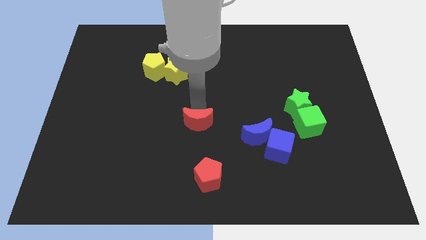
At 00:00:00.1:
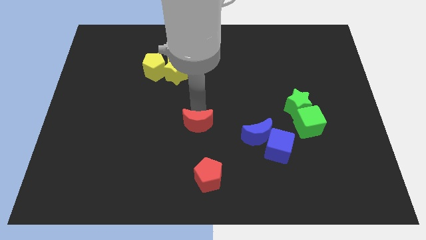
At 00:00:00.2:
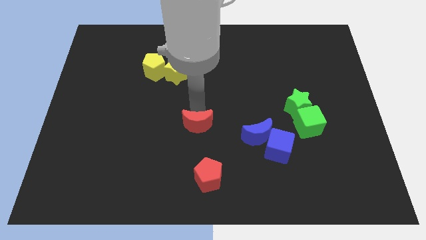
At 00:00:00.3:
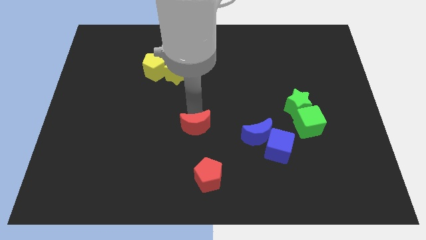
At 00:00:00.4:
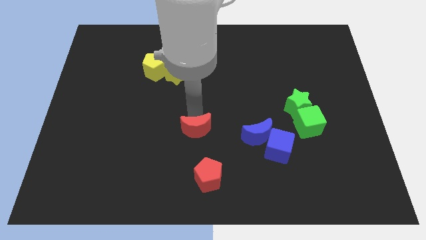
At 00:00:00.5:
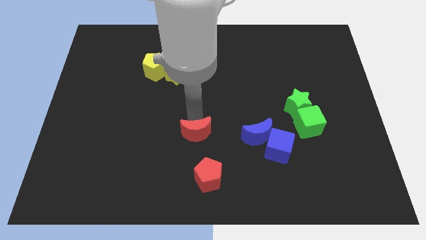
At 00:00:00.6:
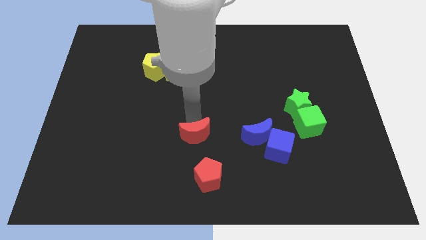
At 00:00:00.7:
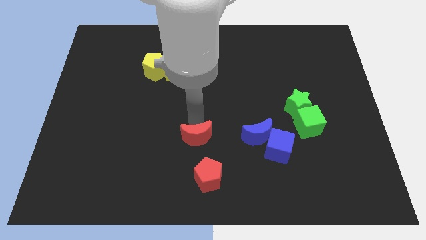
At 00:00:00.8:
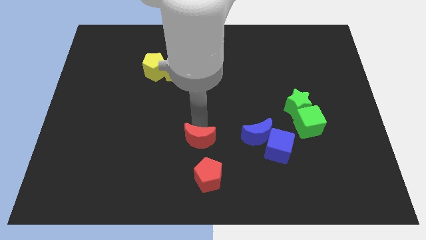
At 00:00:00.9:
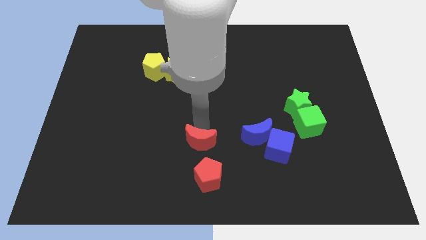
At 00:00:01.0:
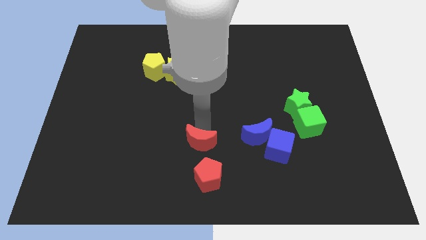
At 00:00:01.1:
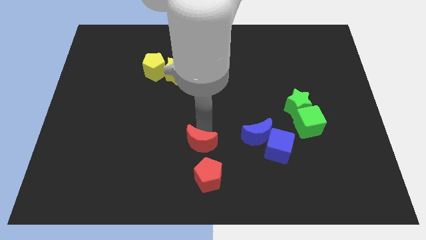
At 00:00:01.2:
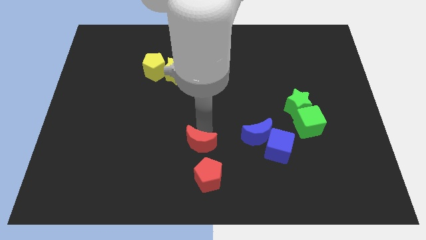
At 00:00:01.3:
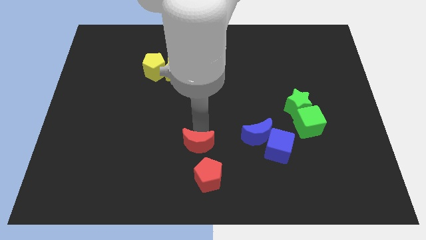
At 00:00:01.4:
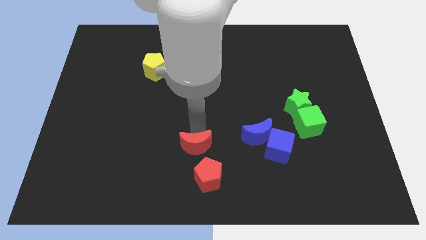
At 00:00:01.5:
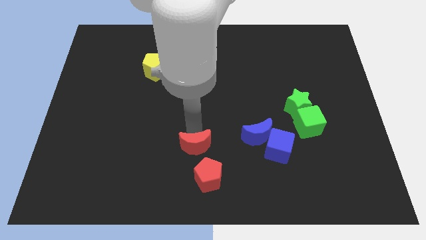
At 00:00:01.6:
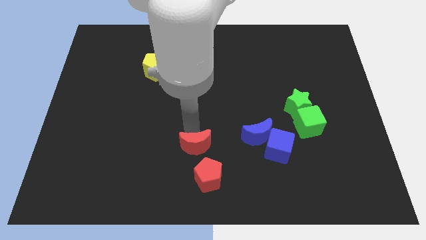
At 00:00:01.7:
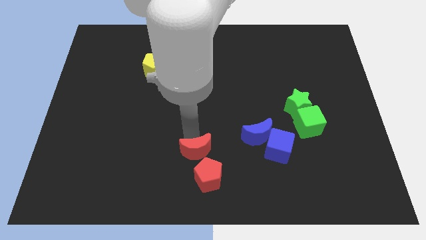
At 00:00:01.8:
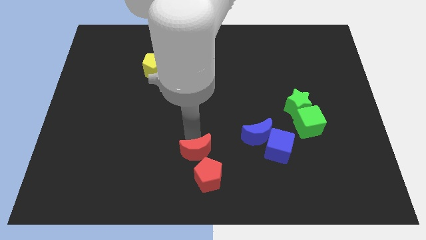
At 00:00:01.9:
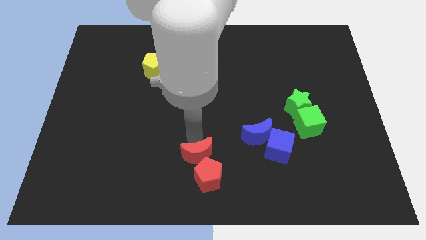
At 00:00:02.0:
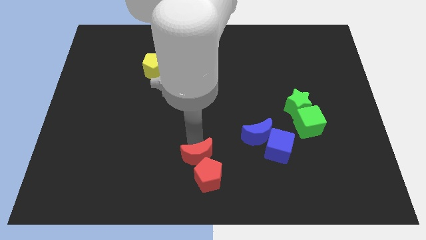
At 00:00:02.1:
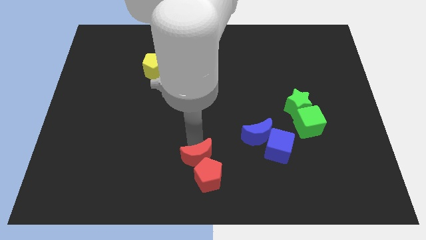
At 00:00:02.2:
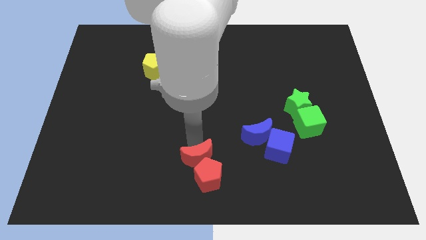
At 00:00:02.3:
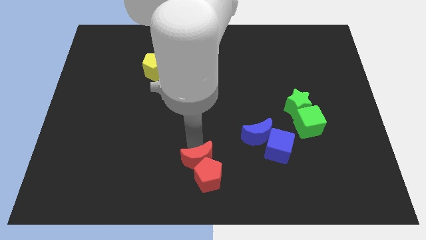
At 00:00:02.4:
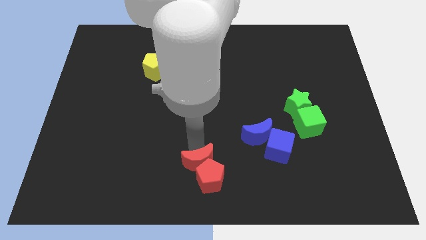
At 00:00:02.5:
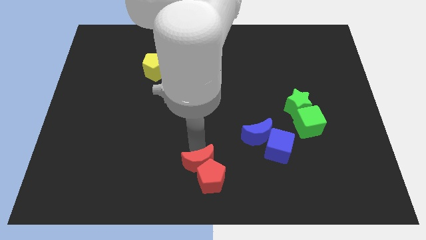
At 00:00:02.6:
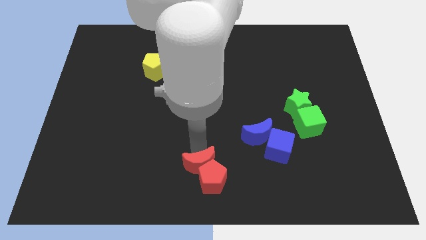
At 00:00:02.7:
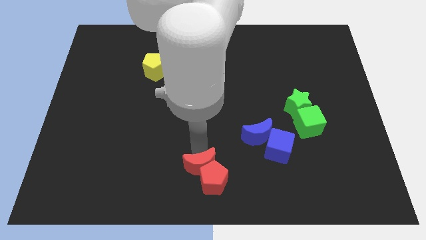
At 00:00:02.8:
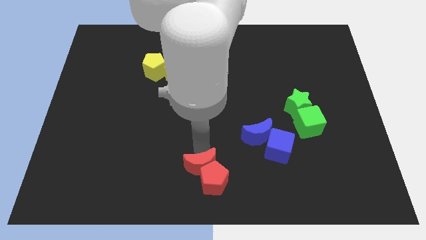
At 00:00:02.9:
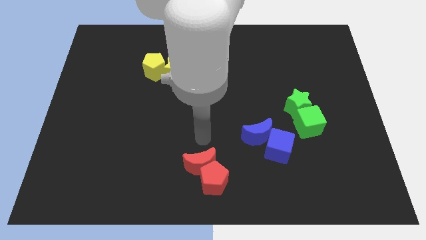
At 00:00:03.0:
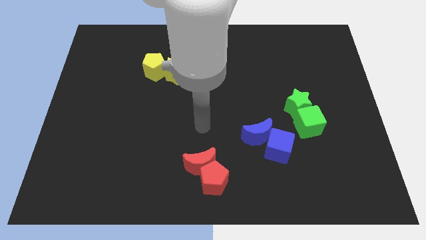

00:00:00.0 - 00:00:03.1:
push the red moon into the red pentagon

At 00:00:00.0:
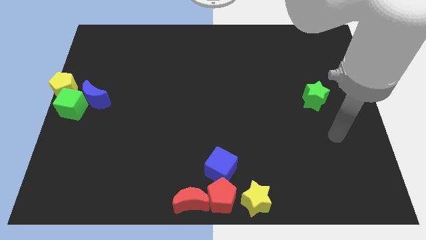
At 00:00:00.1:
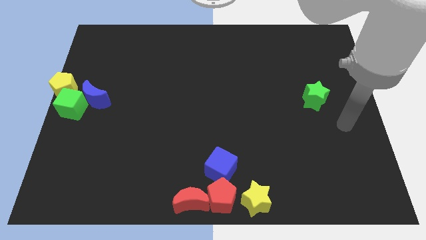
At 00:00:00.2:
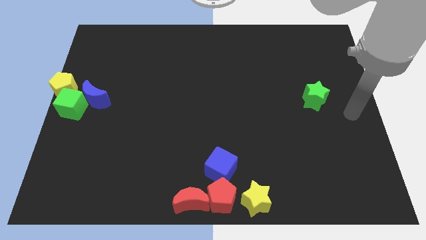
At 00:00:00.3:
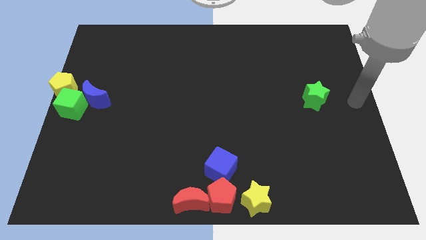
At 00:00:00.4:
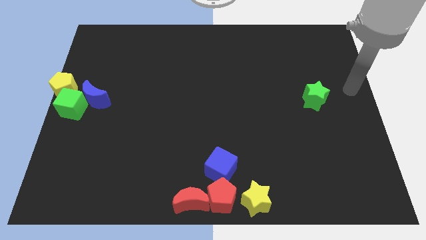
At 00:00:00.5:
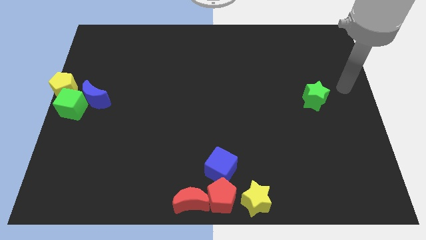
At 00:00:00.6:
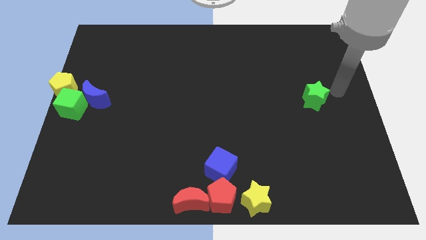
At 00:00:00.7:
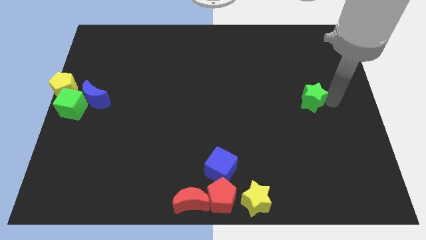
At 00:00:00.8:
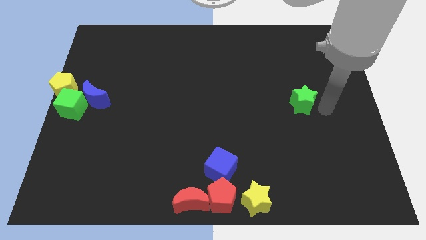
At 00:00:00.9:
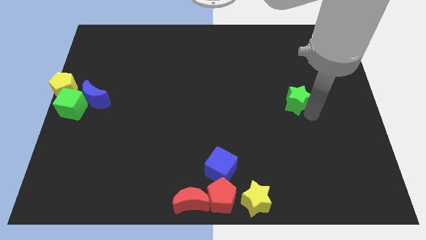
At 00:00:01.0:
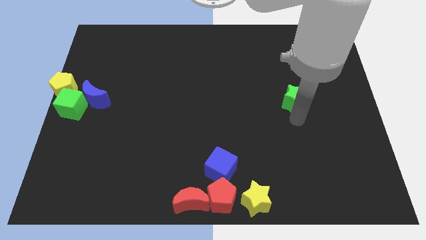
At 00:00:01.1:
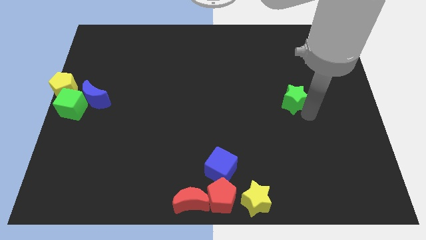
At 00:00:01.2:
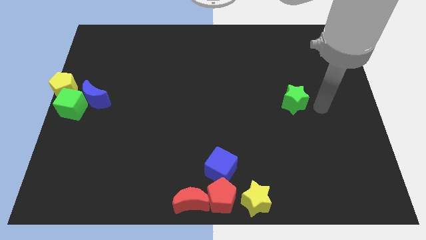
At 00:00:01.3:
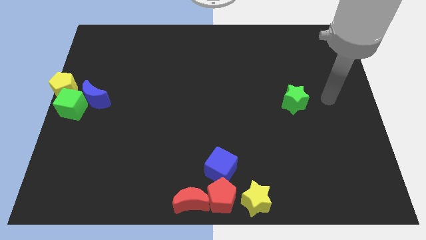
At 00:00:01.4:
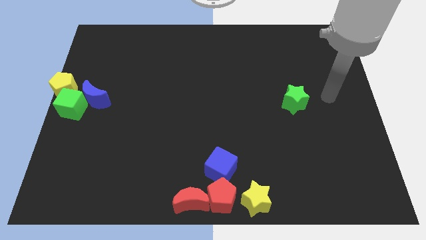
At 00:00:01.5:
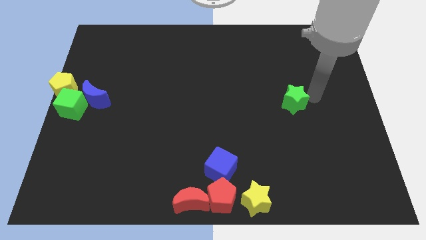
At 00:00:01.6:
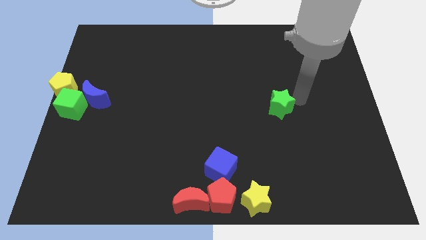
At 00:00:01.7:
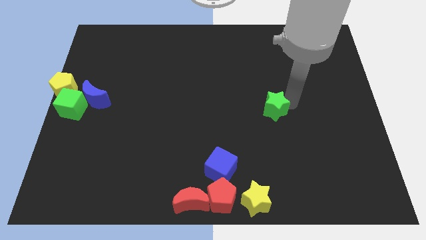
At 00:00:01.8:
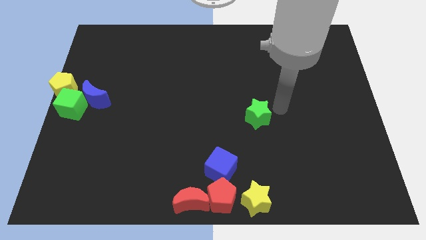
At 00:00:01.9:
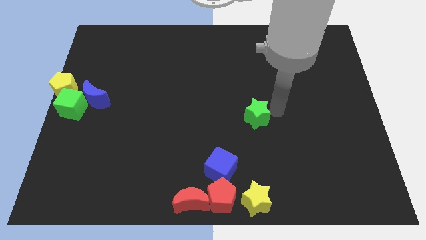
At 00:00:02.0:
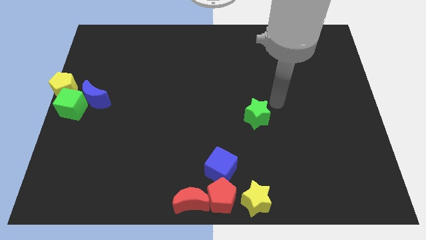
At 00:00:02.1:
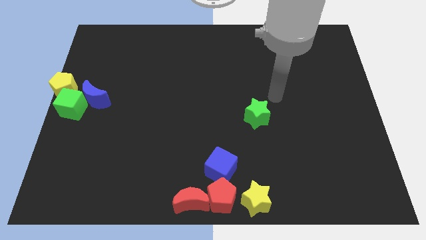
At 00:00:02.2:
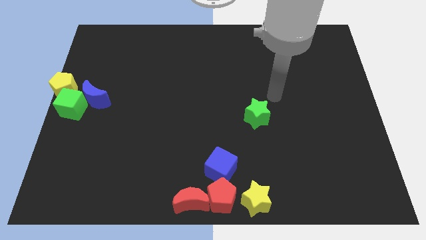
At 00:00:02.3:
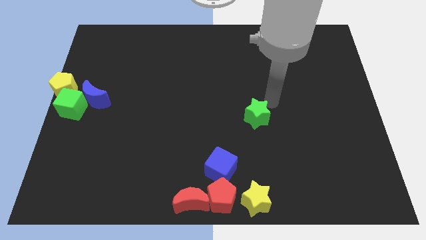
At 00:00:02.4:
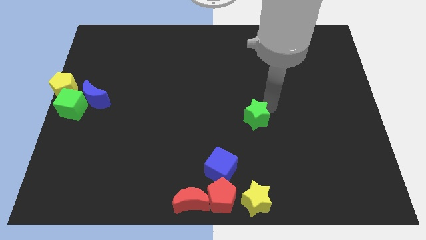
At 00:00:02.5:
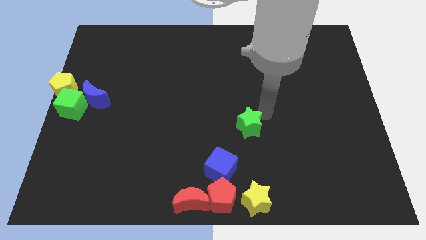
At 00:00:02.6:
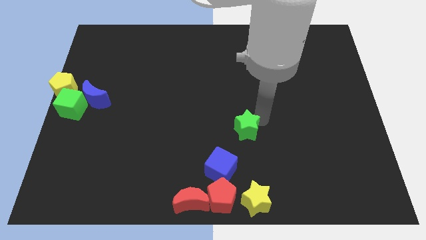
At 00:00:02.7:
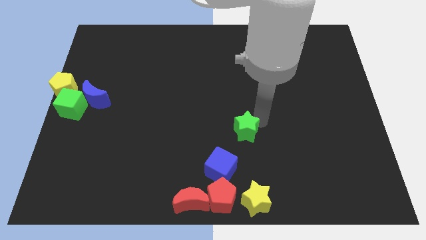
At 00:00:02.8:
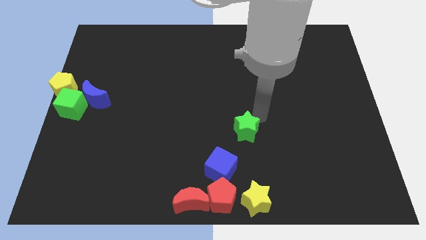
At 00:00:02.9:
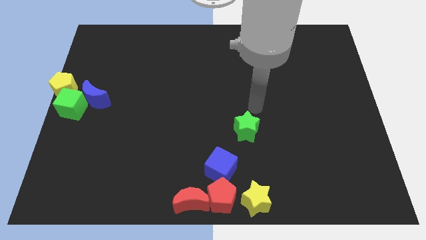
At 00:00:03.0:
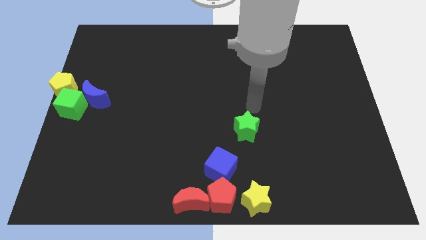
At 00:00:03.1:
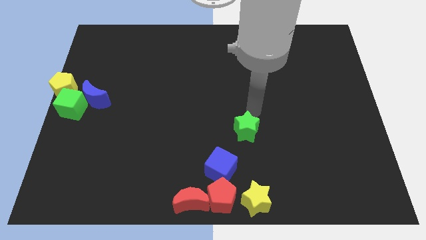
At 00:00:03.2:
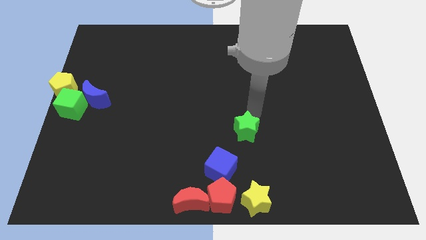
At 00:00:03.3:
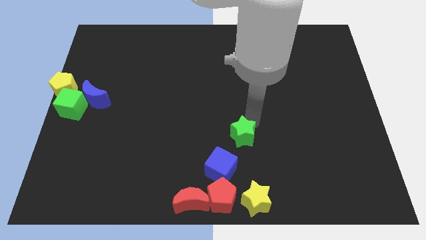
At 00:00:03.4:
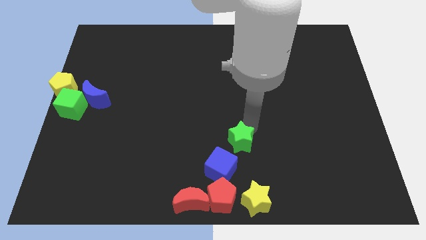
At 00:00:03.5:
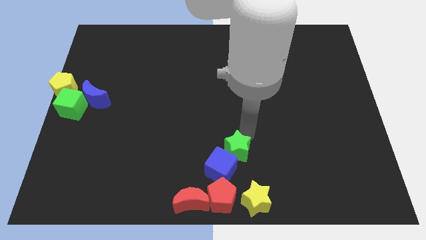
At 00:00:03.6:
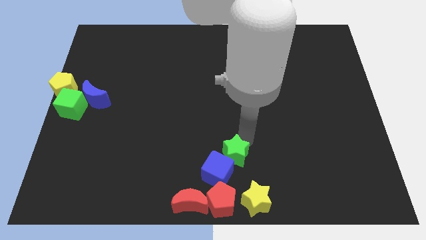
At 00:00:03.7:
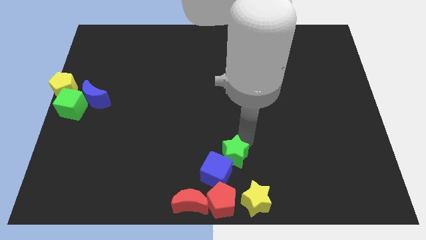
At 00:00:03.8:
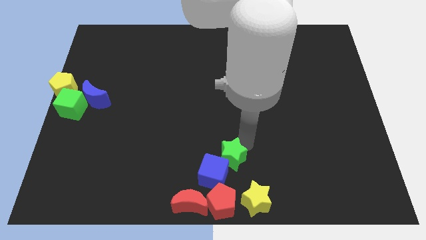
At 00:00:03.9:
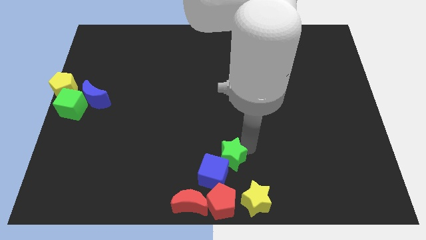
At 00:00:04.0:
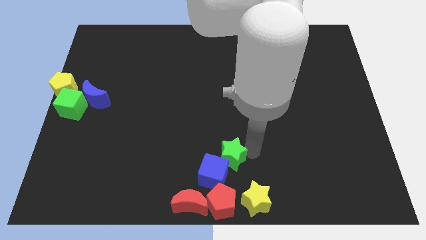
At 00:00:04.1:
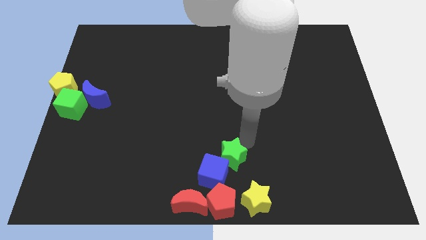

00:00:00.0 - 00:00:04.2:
move green star into the blue cube

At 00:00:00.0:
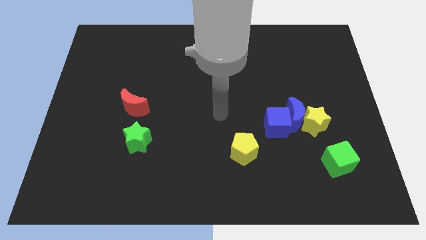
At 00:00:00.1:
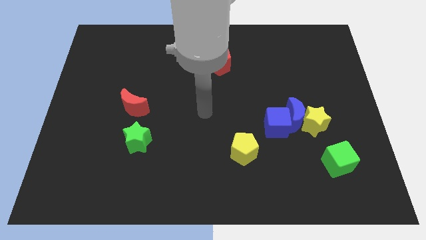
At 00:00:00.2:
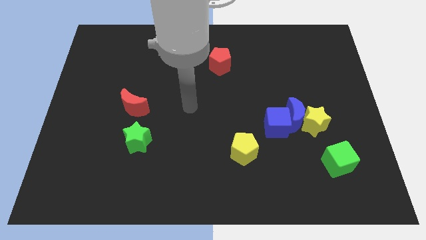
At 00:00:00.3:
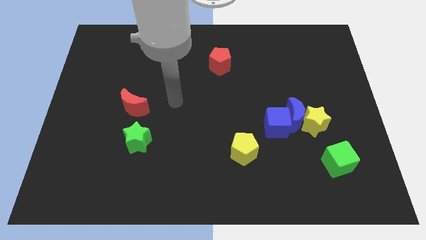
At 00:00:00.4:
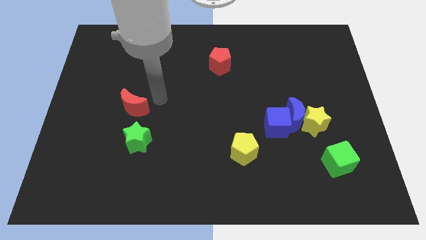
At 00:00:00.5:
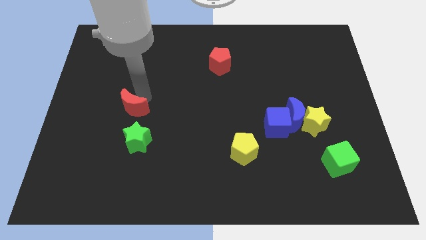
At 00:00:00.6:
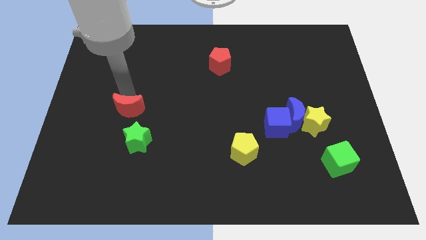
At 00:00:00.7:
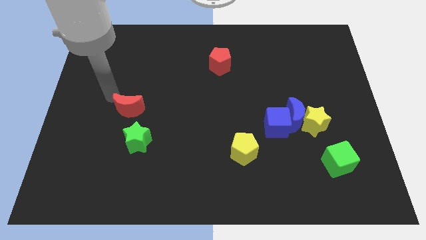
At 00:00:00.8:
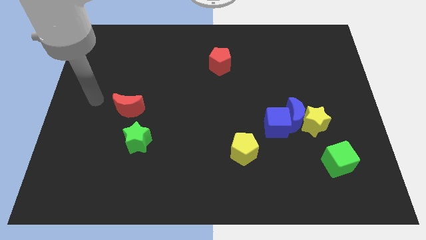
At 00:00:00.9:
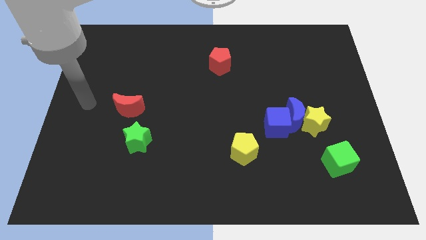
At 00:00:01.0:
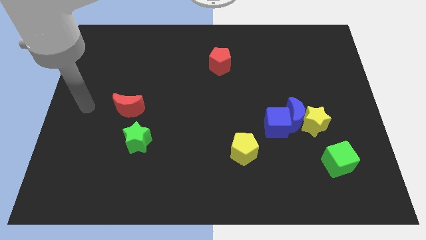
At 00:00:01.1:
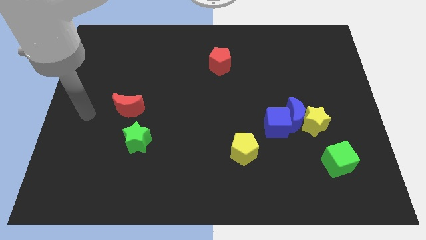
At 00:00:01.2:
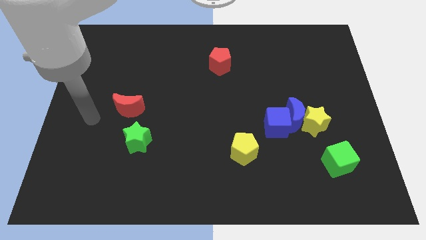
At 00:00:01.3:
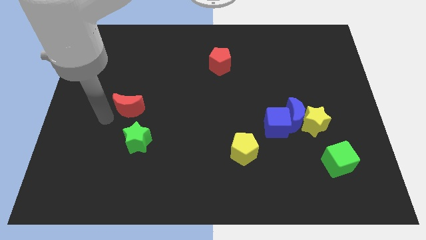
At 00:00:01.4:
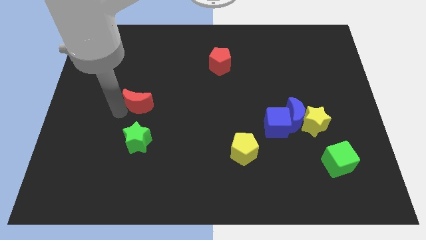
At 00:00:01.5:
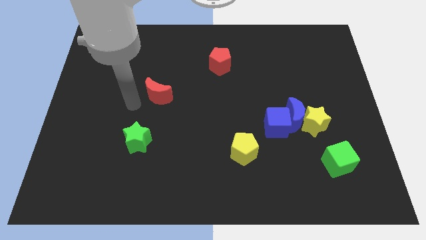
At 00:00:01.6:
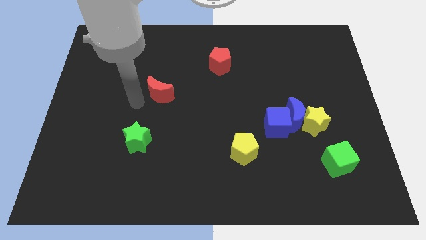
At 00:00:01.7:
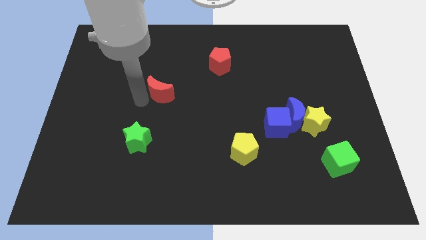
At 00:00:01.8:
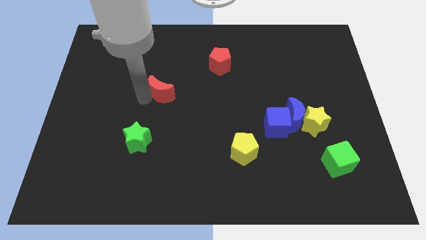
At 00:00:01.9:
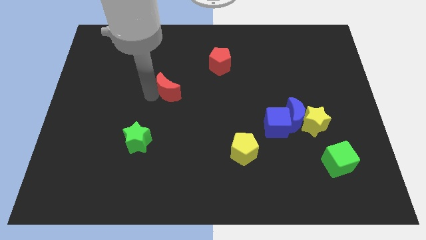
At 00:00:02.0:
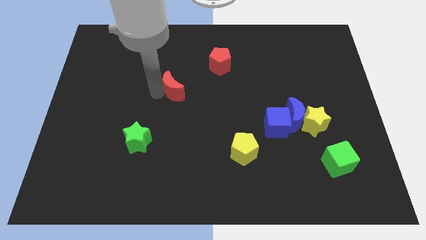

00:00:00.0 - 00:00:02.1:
slightly push the red moon towards red pentagon
